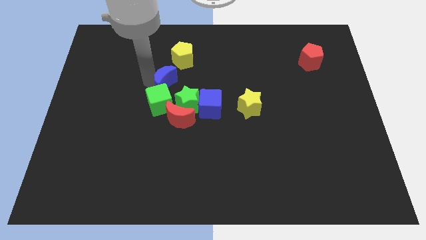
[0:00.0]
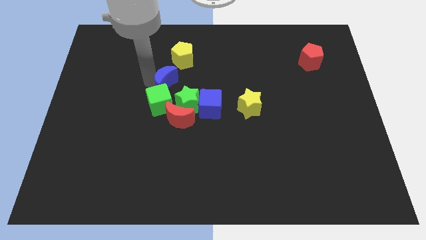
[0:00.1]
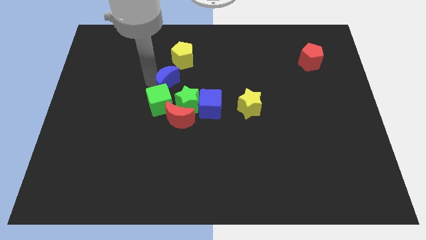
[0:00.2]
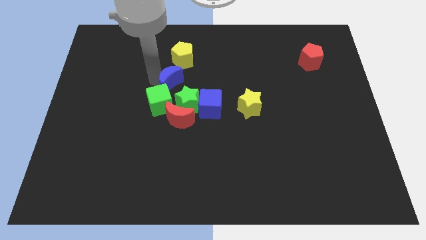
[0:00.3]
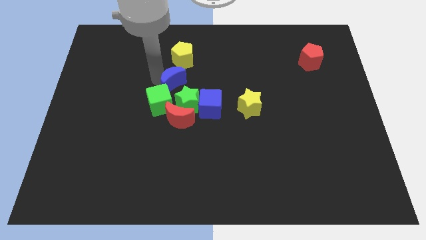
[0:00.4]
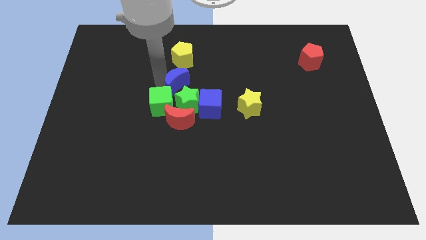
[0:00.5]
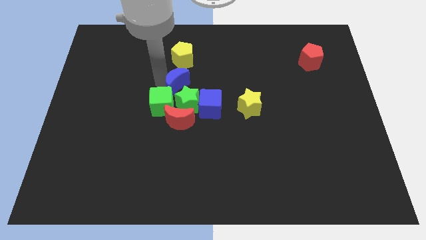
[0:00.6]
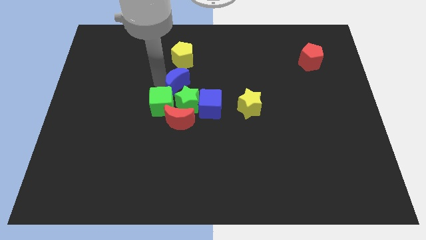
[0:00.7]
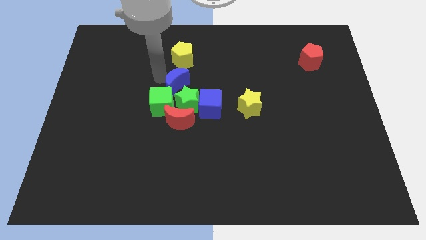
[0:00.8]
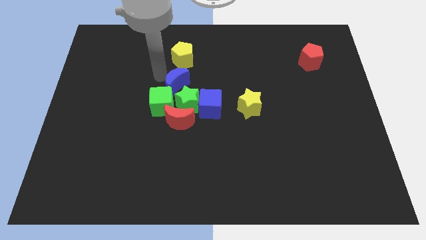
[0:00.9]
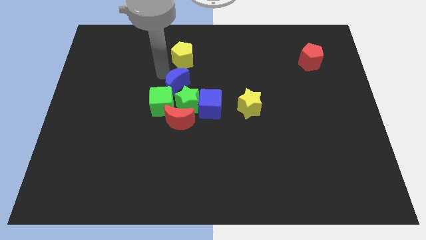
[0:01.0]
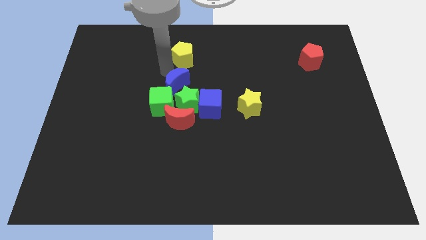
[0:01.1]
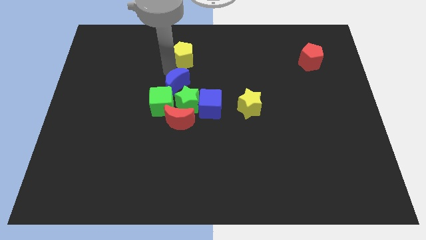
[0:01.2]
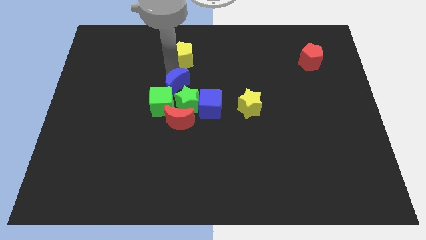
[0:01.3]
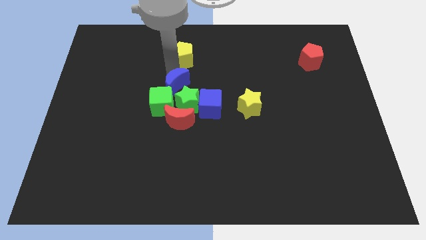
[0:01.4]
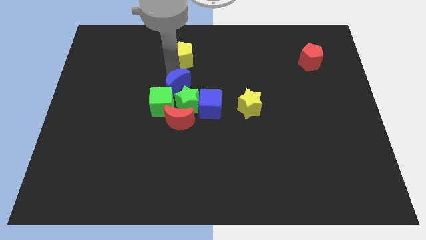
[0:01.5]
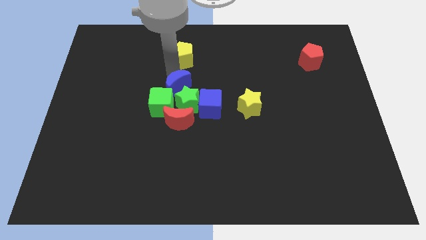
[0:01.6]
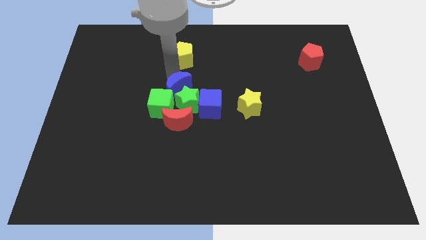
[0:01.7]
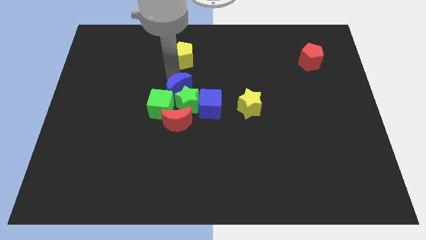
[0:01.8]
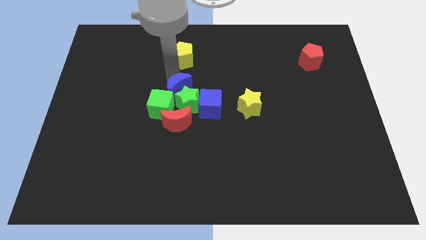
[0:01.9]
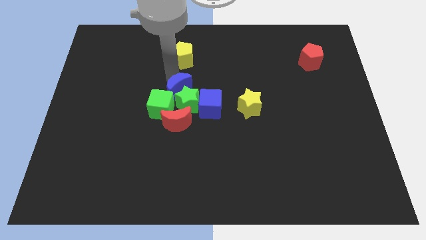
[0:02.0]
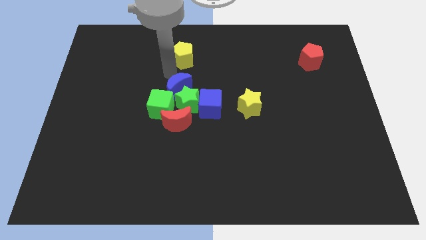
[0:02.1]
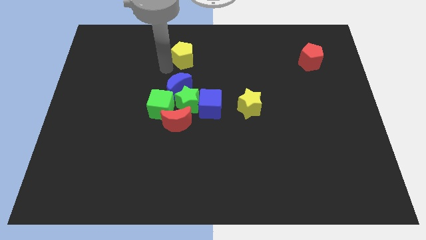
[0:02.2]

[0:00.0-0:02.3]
push the blue crescent into the green star

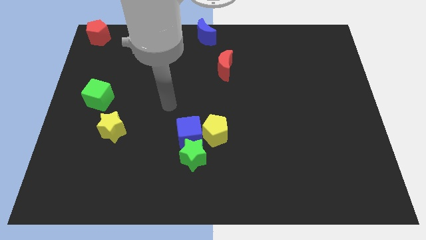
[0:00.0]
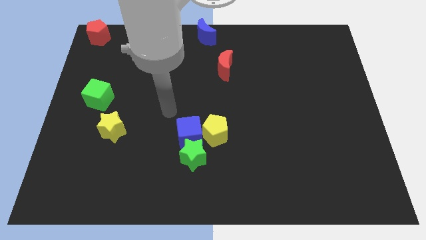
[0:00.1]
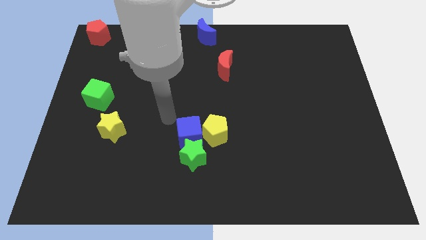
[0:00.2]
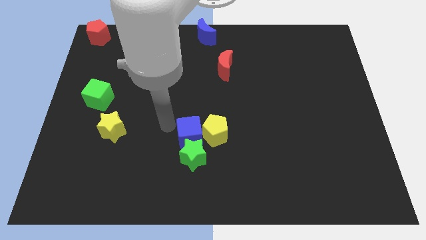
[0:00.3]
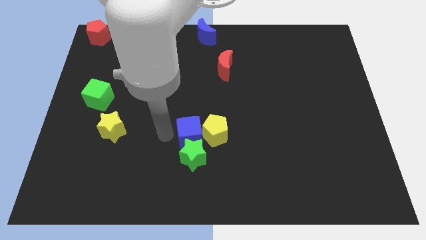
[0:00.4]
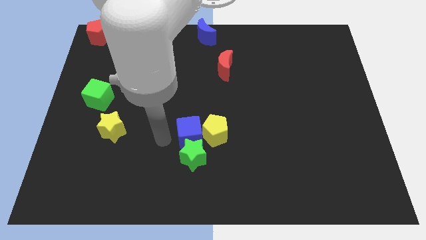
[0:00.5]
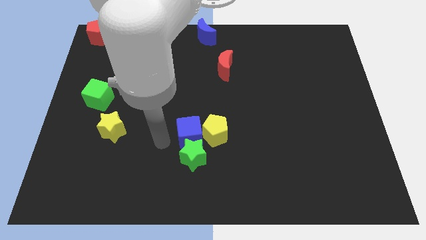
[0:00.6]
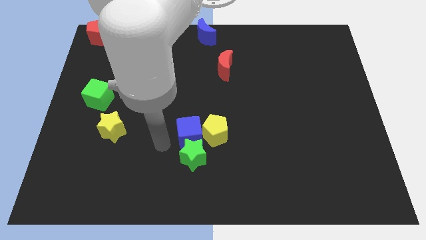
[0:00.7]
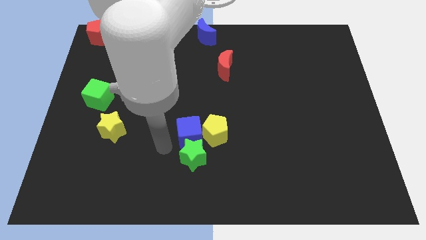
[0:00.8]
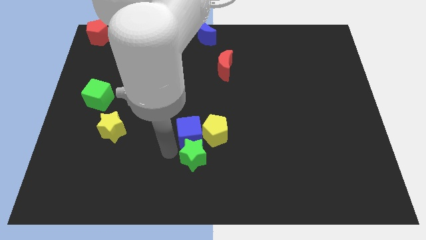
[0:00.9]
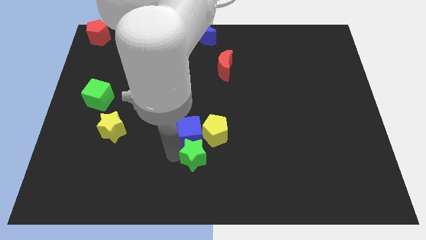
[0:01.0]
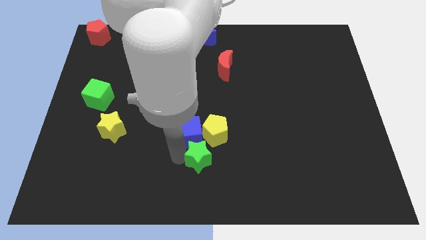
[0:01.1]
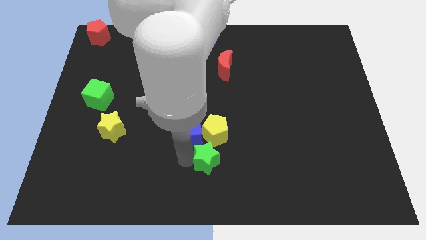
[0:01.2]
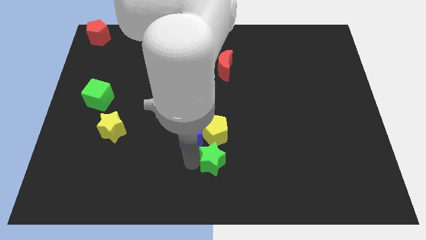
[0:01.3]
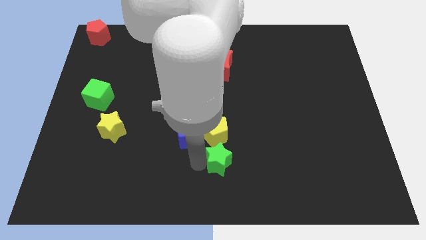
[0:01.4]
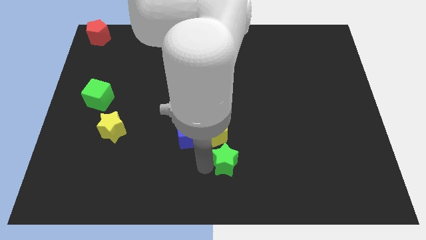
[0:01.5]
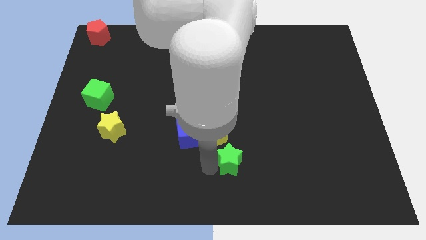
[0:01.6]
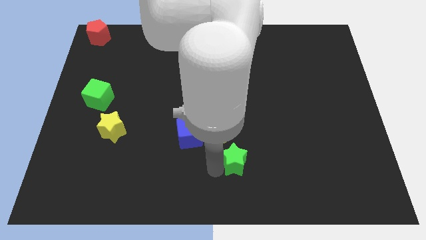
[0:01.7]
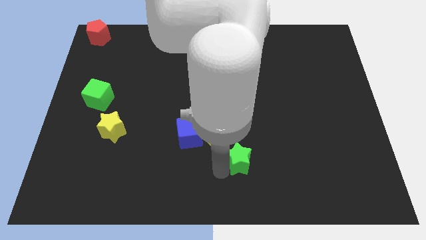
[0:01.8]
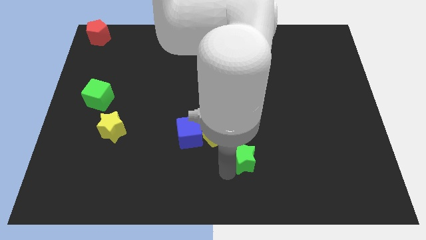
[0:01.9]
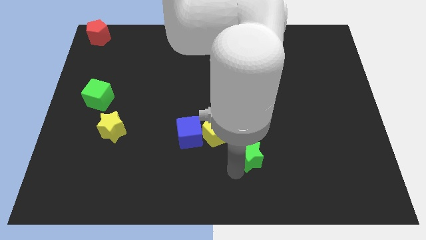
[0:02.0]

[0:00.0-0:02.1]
push green star towards the right

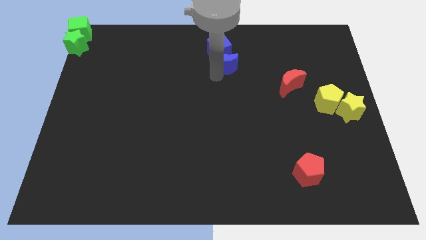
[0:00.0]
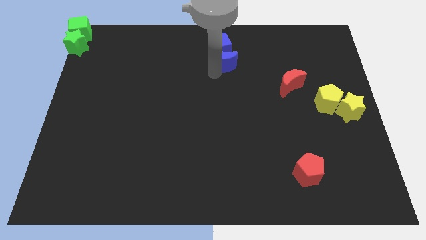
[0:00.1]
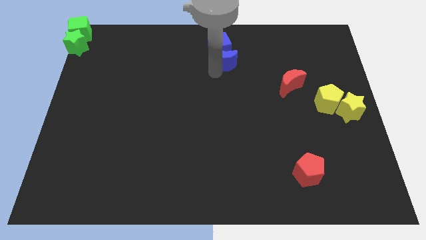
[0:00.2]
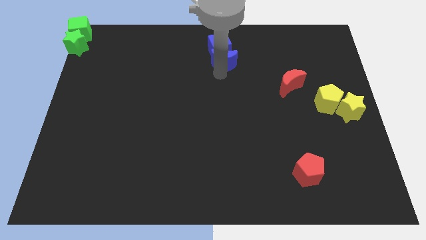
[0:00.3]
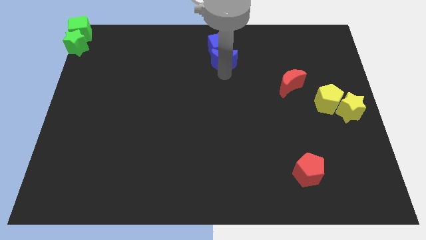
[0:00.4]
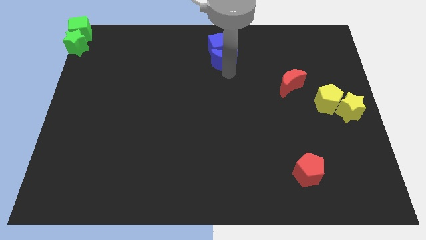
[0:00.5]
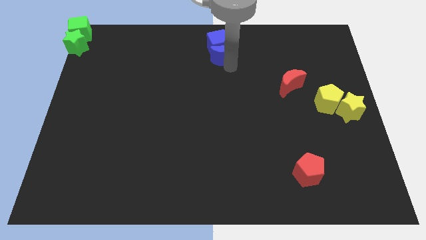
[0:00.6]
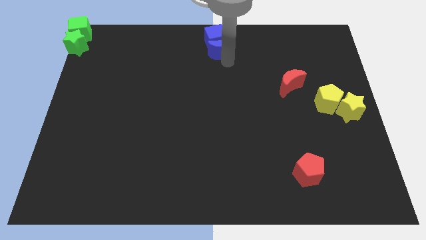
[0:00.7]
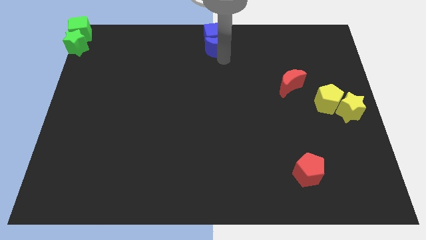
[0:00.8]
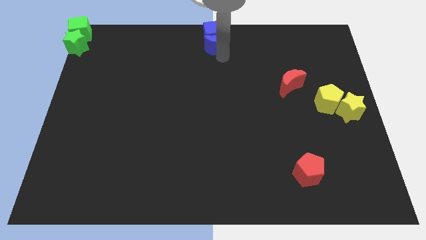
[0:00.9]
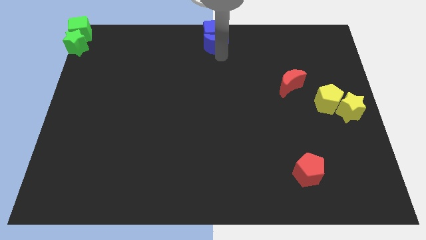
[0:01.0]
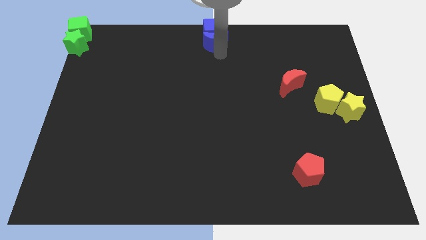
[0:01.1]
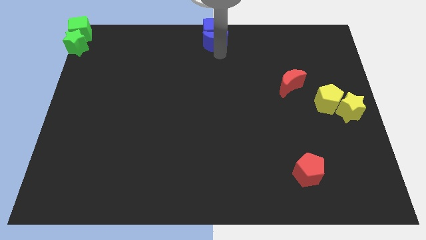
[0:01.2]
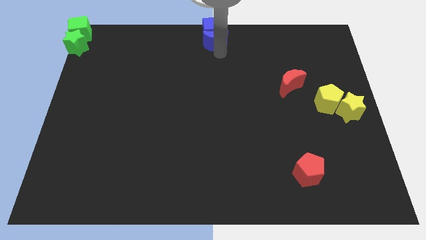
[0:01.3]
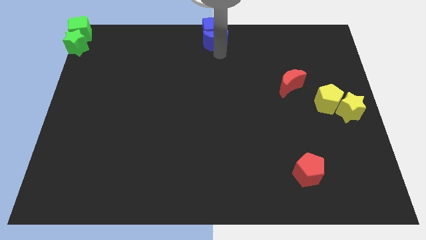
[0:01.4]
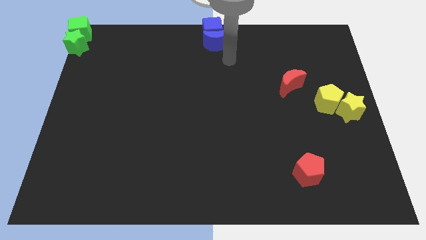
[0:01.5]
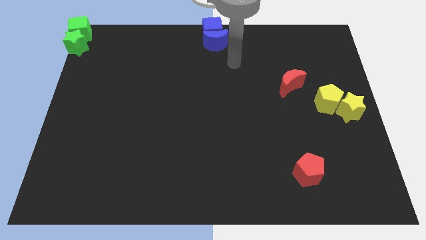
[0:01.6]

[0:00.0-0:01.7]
place the blue blocks at the top center

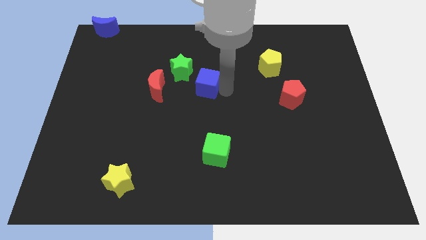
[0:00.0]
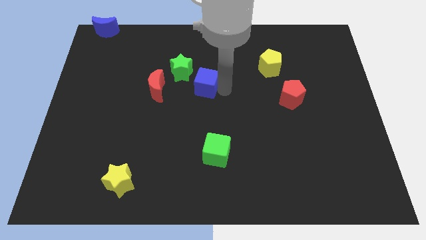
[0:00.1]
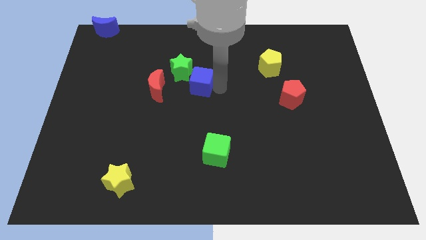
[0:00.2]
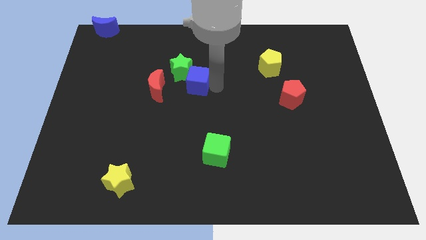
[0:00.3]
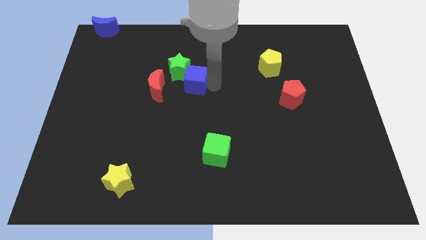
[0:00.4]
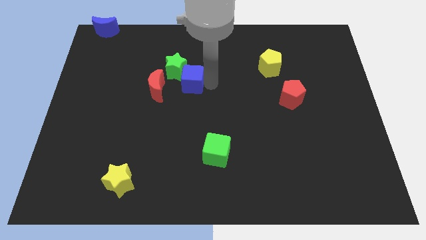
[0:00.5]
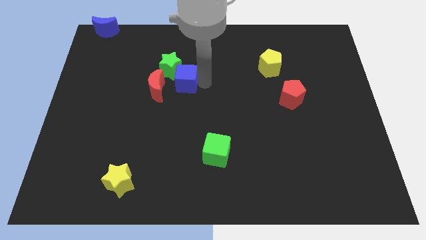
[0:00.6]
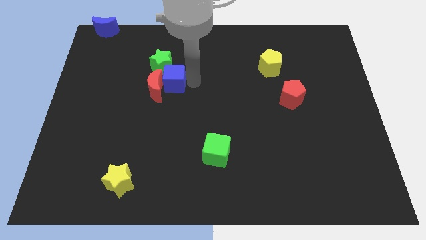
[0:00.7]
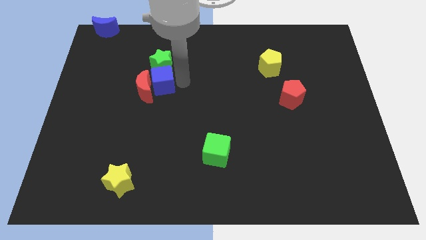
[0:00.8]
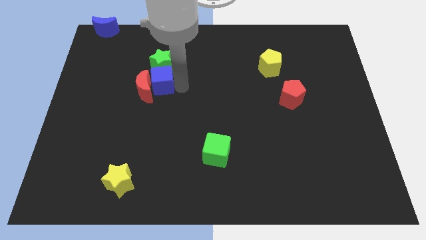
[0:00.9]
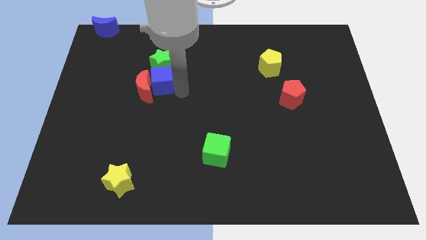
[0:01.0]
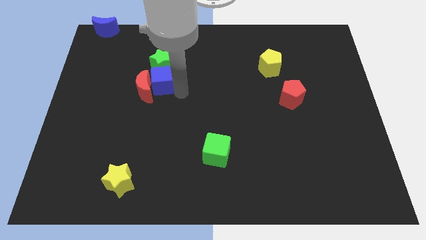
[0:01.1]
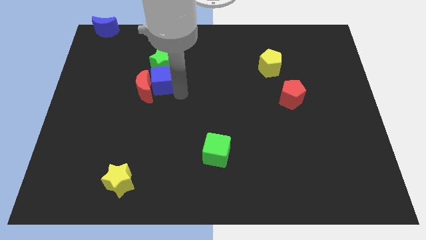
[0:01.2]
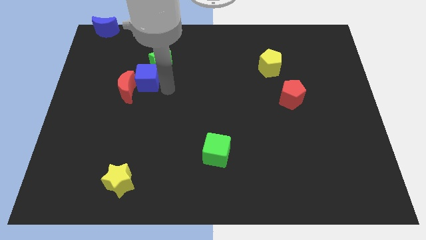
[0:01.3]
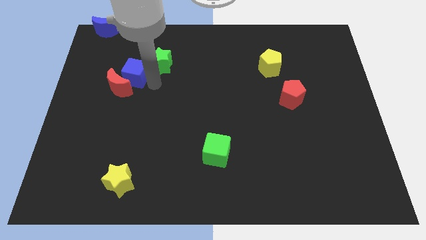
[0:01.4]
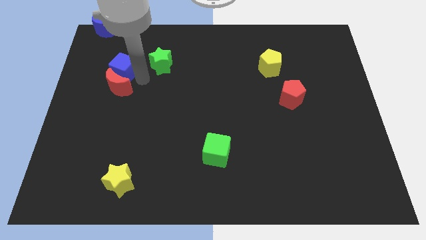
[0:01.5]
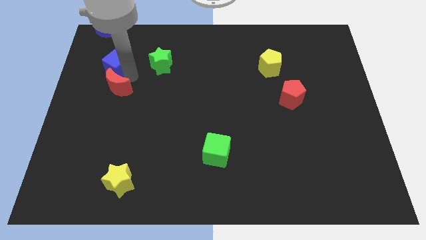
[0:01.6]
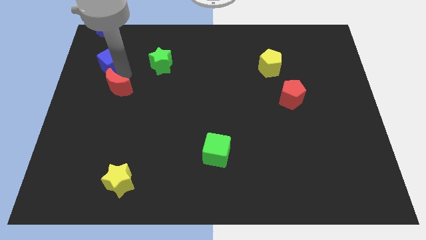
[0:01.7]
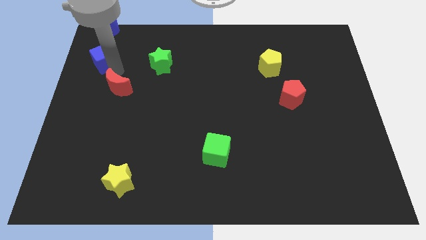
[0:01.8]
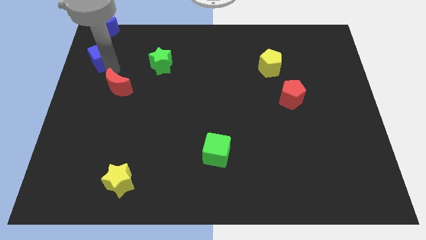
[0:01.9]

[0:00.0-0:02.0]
slide the blue cube below the blue moon

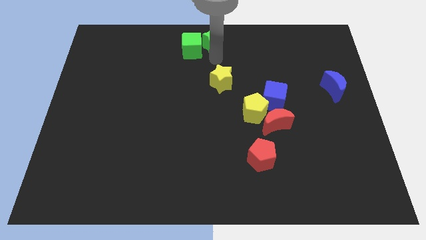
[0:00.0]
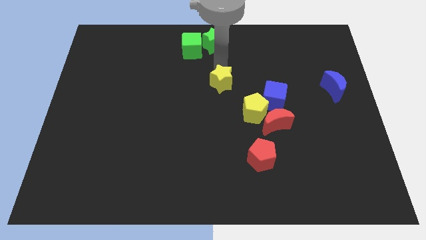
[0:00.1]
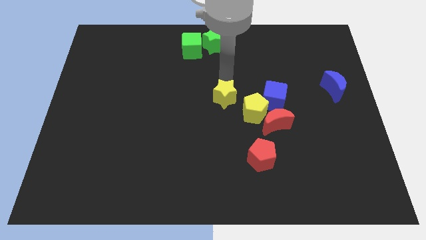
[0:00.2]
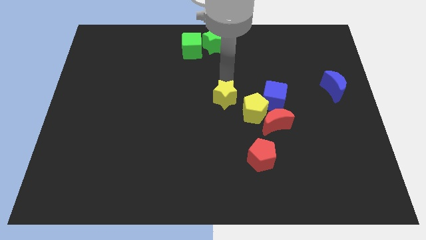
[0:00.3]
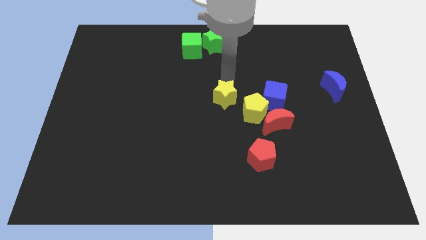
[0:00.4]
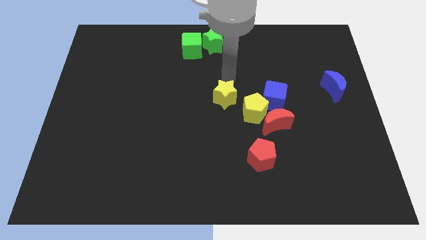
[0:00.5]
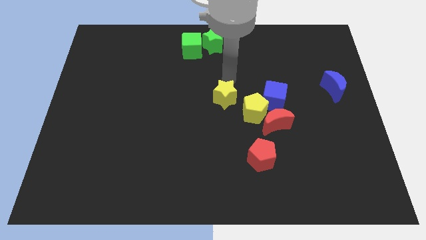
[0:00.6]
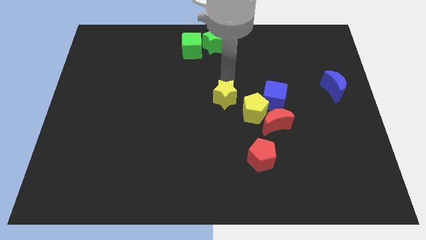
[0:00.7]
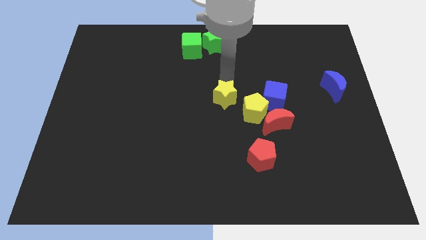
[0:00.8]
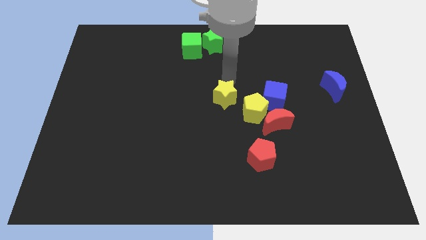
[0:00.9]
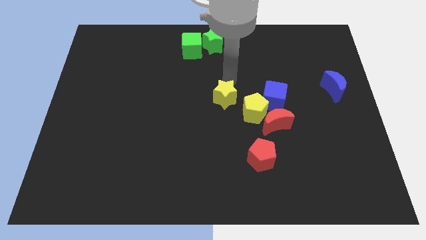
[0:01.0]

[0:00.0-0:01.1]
move yellow star towards the center
